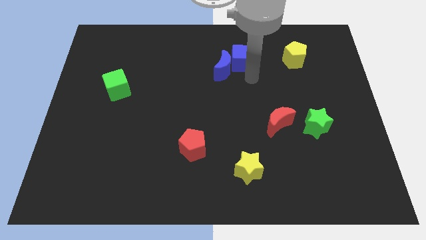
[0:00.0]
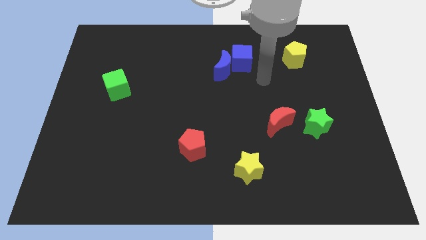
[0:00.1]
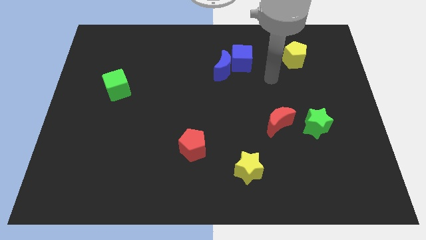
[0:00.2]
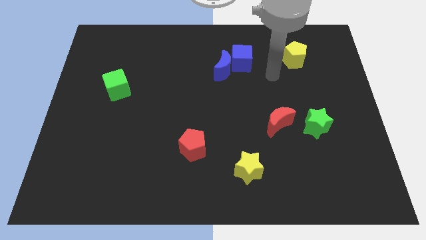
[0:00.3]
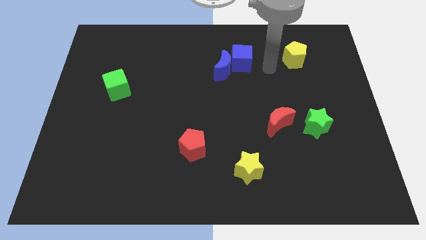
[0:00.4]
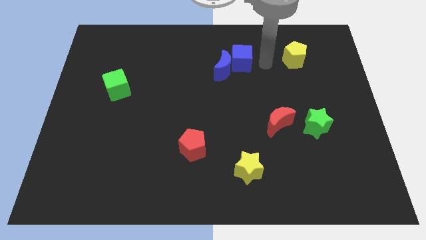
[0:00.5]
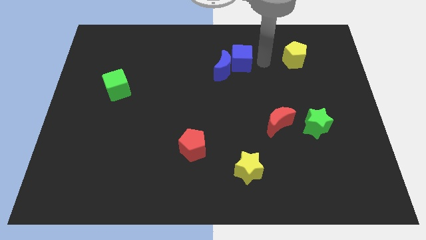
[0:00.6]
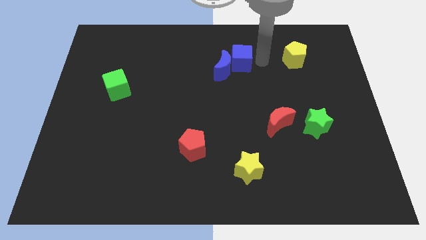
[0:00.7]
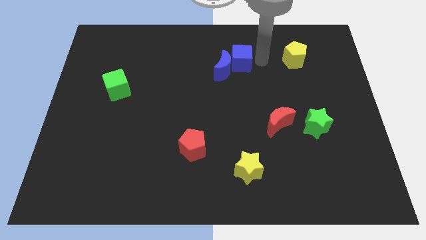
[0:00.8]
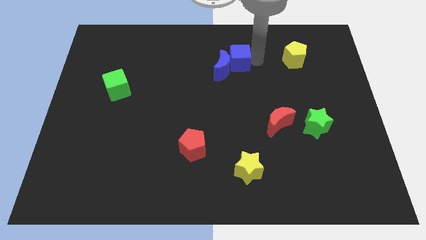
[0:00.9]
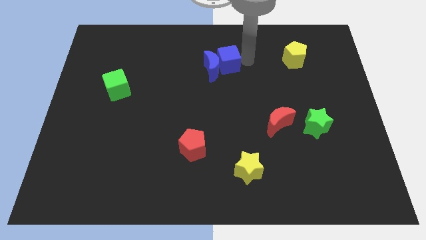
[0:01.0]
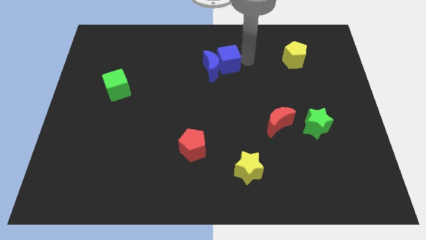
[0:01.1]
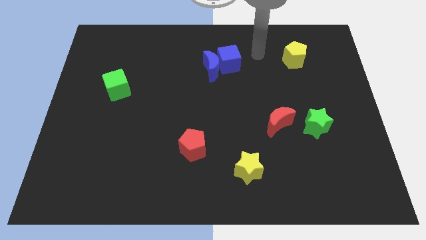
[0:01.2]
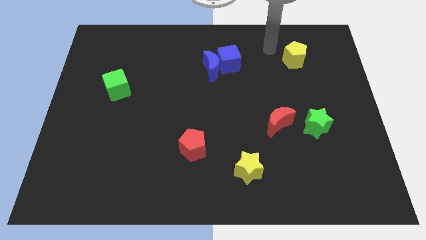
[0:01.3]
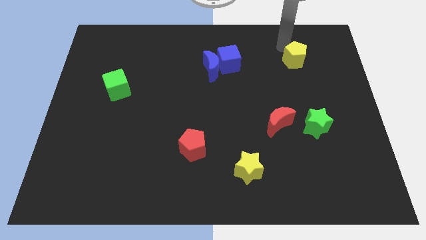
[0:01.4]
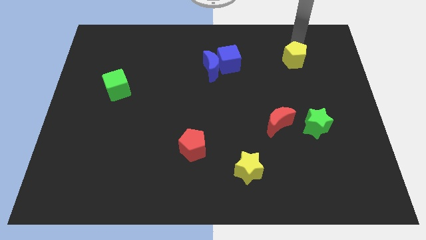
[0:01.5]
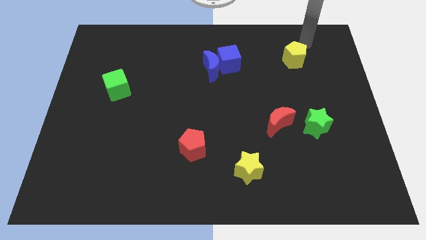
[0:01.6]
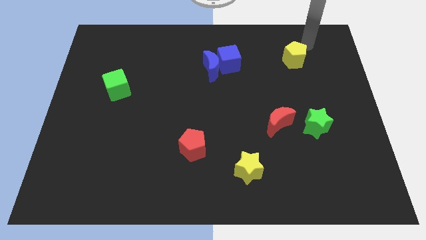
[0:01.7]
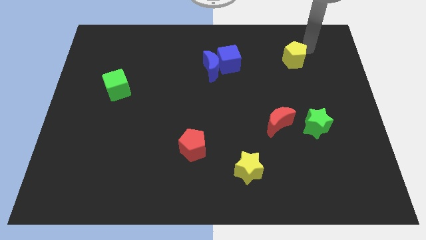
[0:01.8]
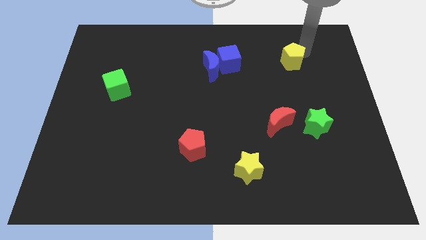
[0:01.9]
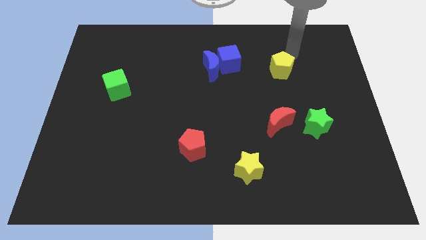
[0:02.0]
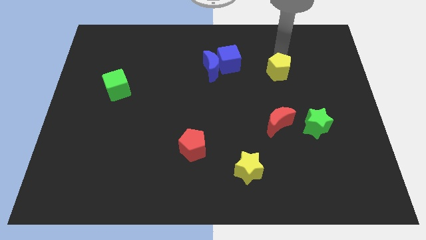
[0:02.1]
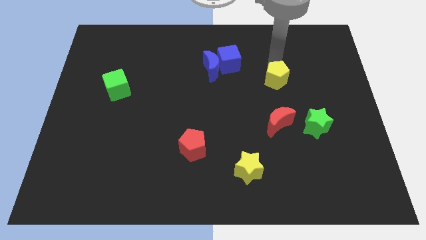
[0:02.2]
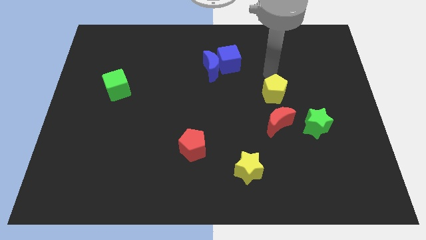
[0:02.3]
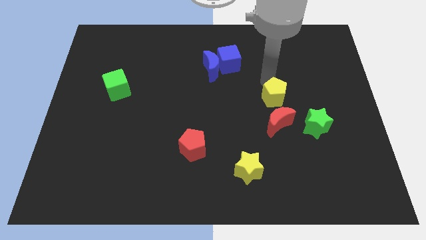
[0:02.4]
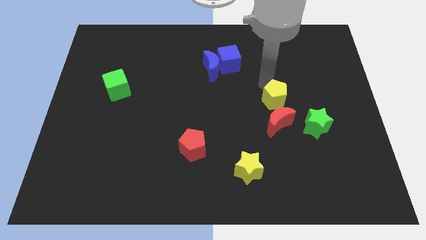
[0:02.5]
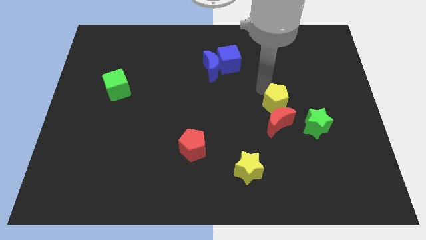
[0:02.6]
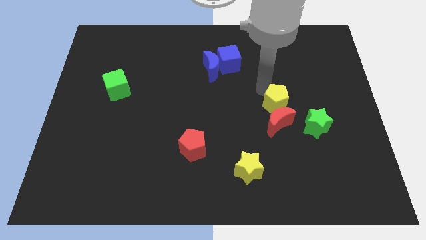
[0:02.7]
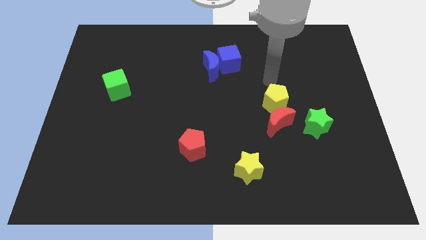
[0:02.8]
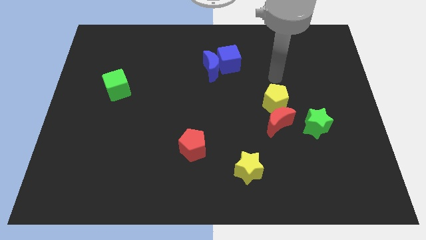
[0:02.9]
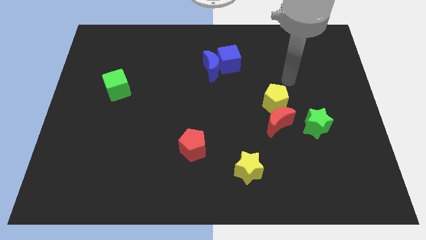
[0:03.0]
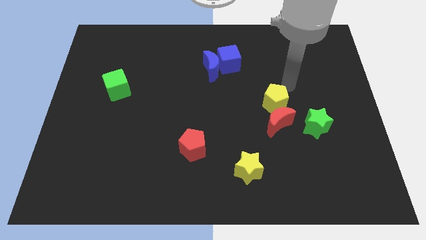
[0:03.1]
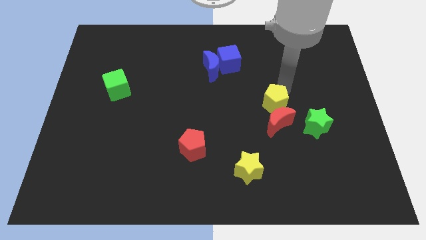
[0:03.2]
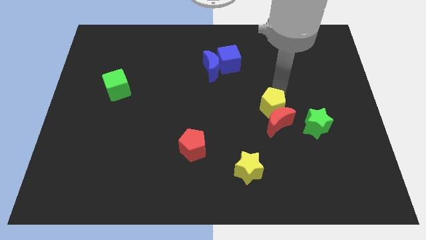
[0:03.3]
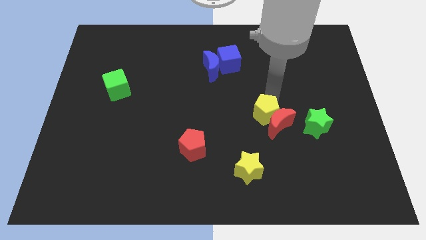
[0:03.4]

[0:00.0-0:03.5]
slide the yellow pentagon into the red crescent

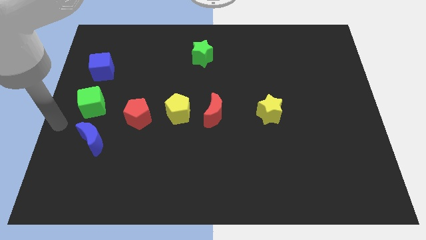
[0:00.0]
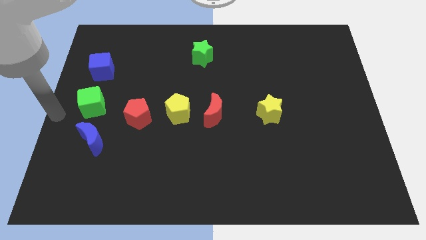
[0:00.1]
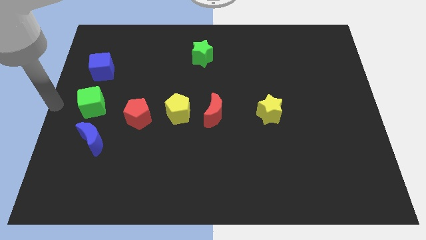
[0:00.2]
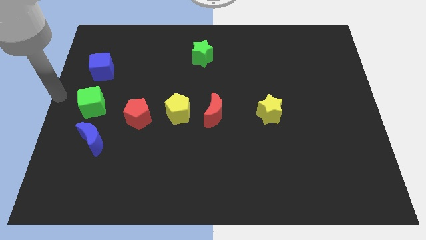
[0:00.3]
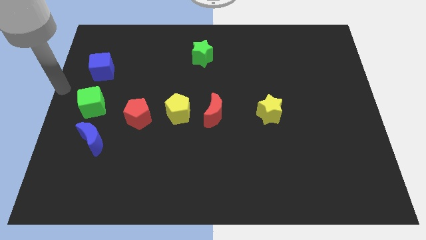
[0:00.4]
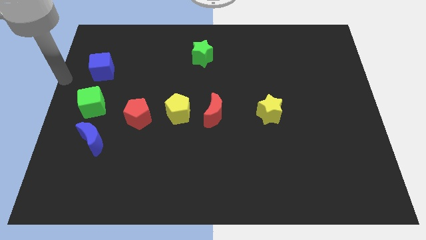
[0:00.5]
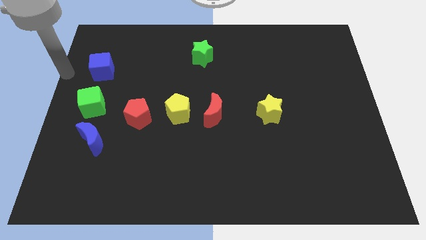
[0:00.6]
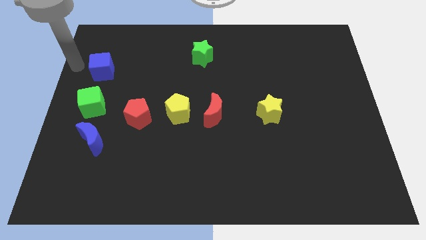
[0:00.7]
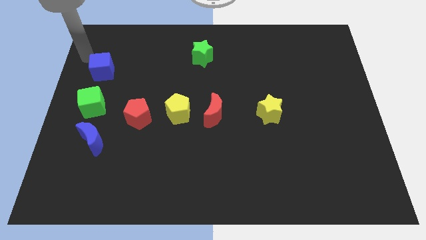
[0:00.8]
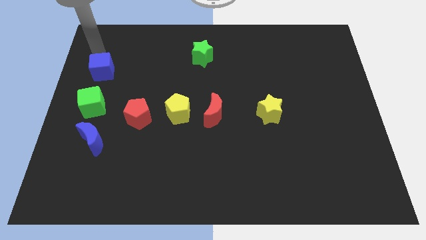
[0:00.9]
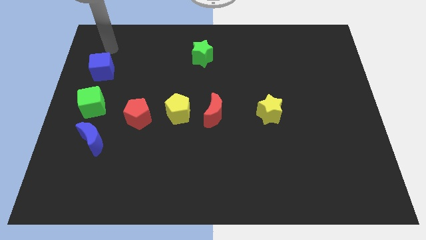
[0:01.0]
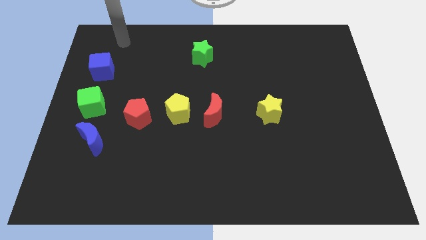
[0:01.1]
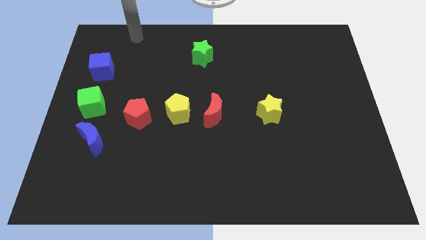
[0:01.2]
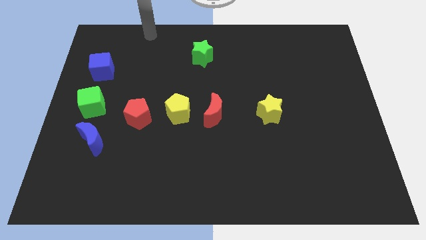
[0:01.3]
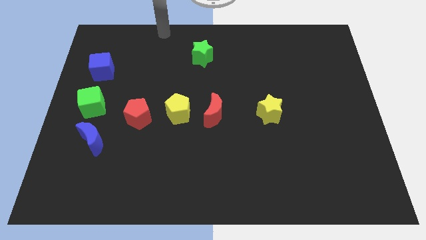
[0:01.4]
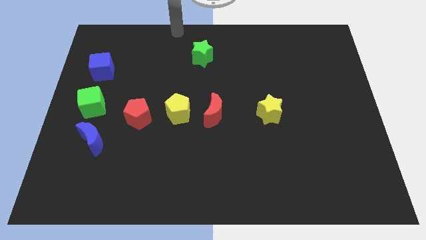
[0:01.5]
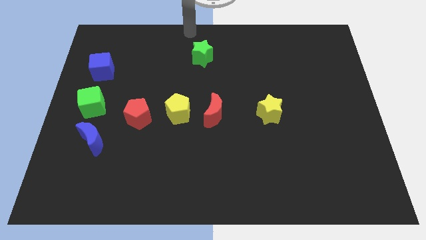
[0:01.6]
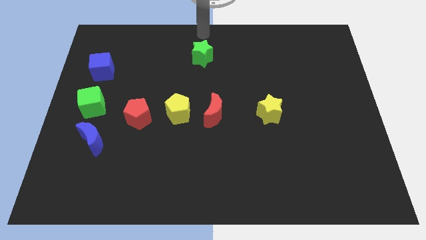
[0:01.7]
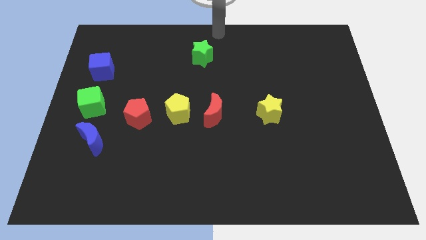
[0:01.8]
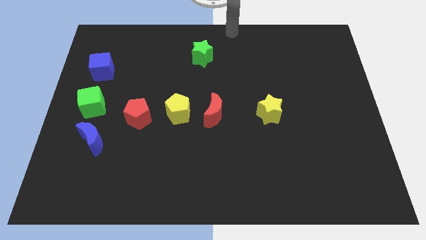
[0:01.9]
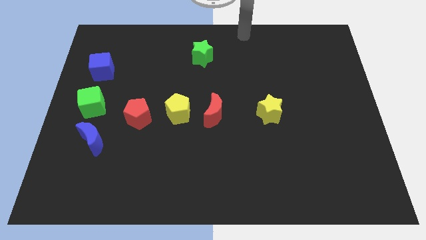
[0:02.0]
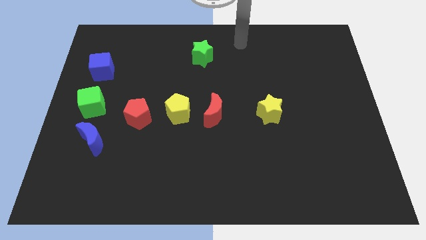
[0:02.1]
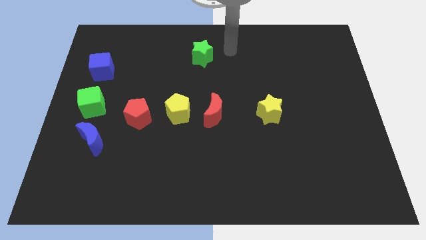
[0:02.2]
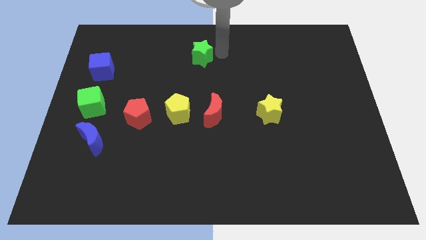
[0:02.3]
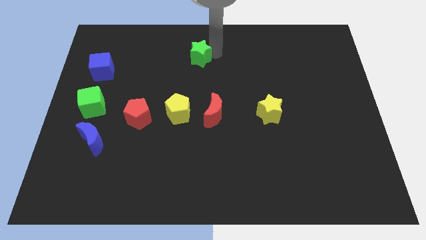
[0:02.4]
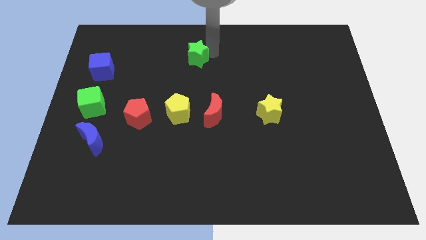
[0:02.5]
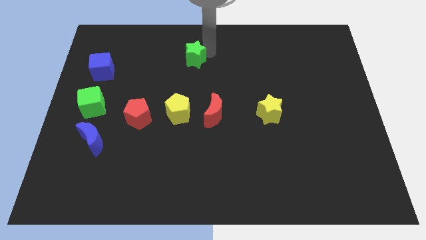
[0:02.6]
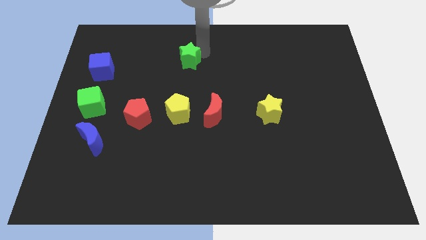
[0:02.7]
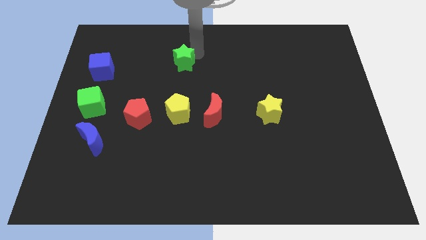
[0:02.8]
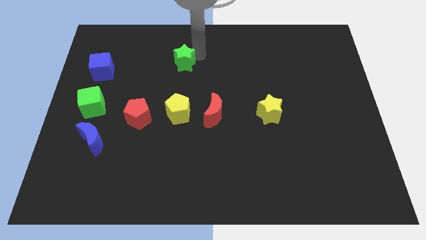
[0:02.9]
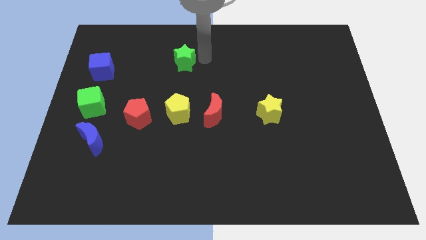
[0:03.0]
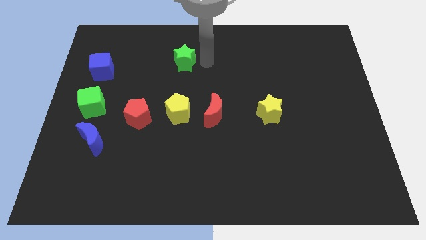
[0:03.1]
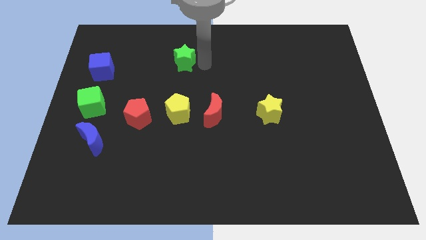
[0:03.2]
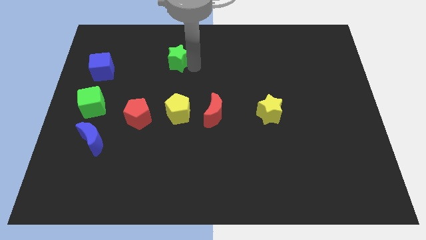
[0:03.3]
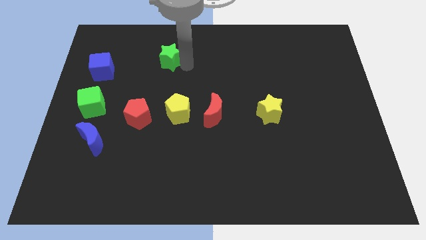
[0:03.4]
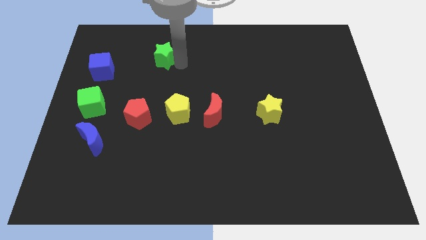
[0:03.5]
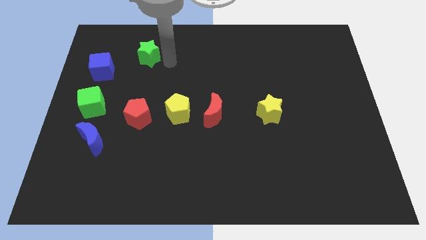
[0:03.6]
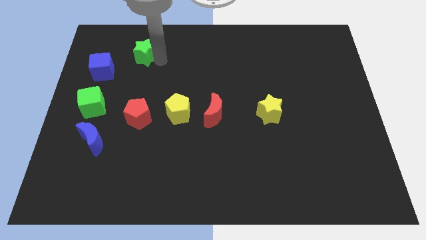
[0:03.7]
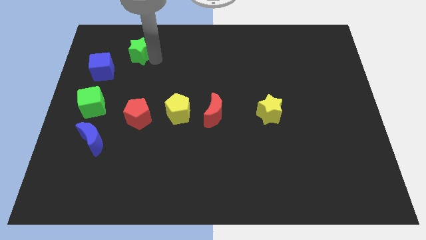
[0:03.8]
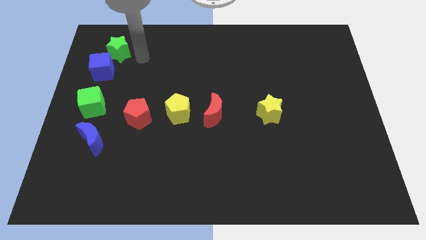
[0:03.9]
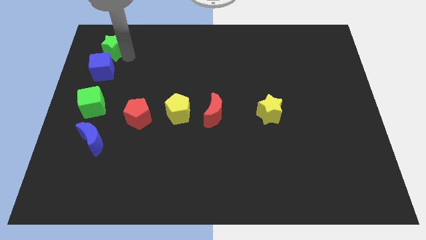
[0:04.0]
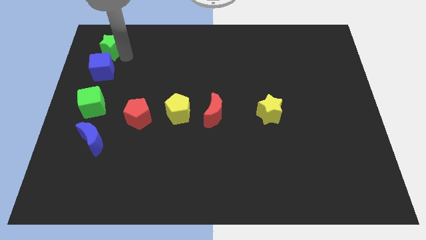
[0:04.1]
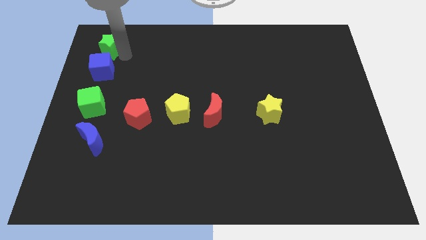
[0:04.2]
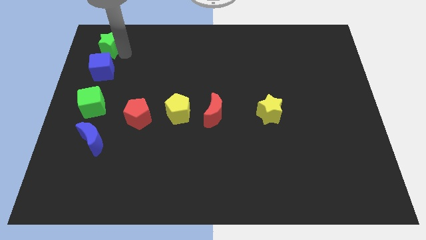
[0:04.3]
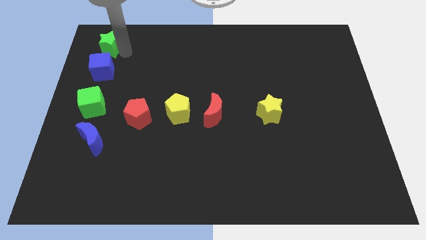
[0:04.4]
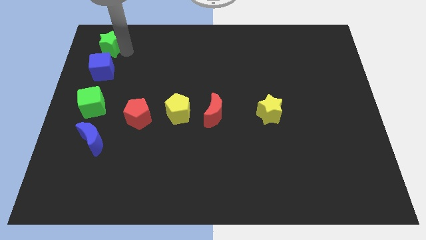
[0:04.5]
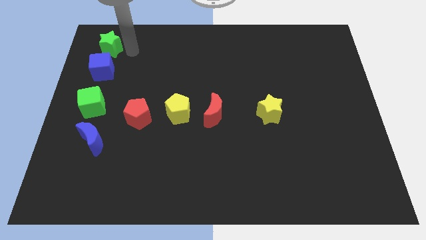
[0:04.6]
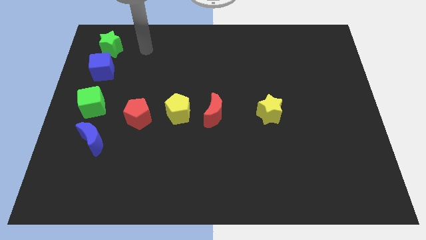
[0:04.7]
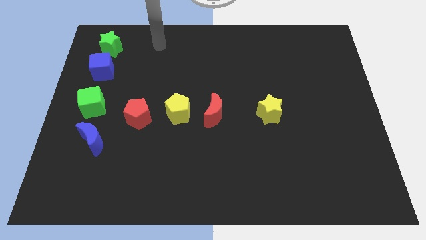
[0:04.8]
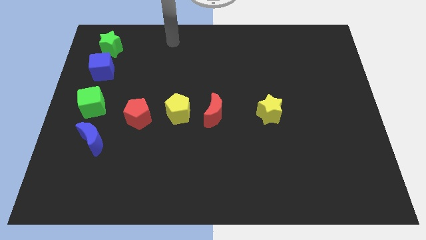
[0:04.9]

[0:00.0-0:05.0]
move the green star to the top side of the blue cube

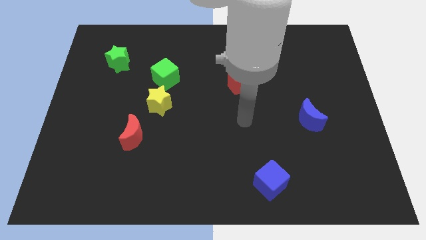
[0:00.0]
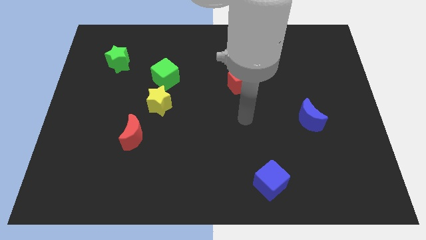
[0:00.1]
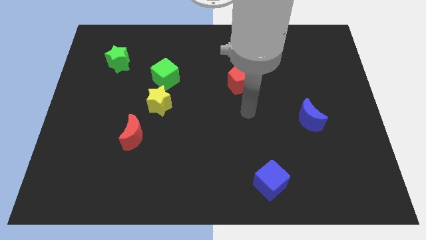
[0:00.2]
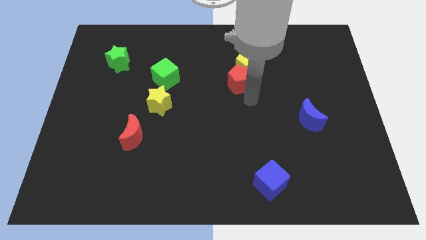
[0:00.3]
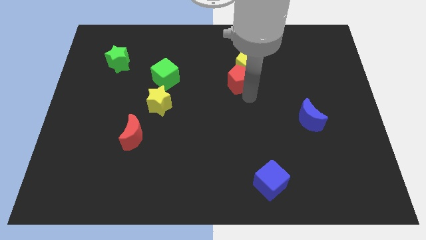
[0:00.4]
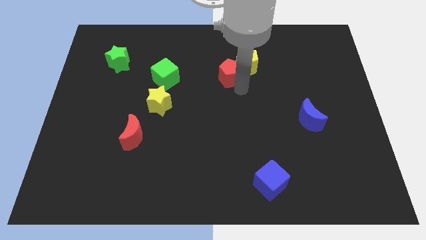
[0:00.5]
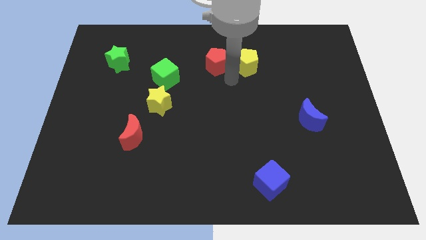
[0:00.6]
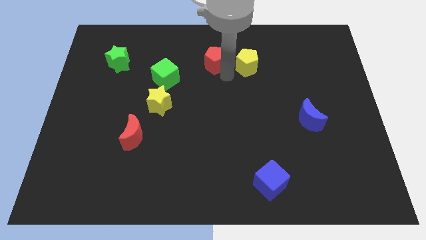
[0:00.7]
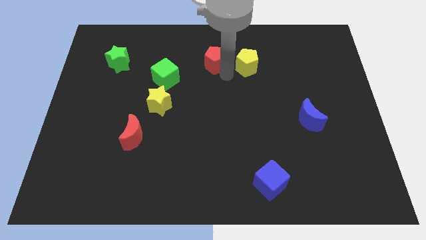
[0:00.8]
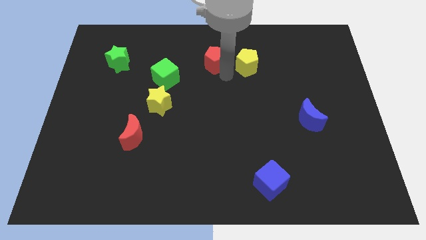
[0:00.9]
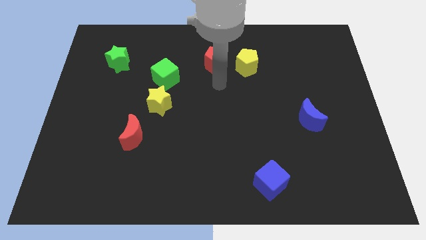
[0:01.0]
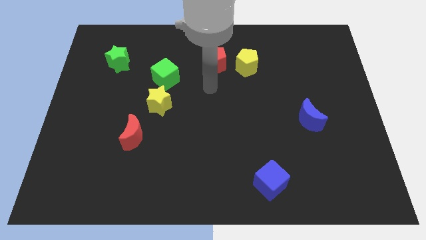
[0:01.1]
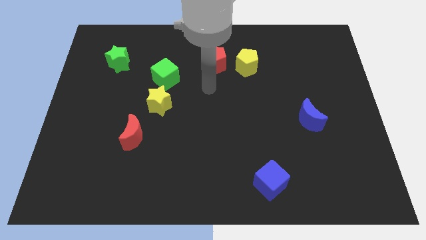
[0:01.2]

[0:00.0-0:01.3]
move red pentagon to the left of yellow pentagon
